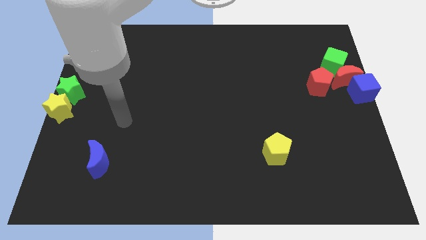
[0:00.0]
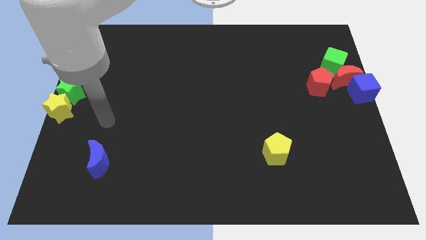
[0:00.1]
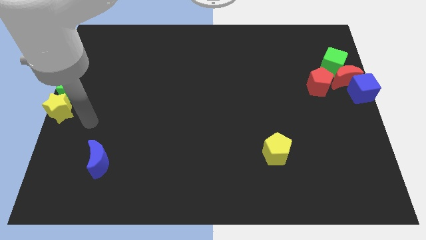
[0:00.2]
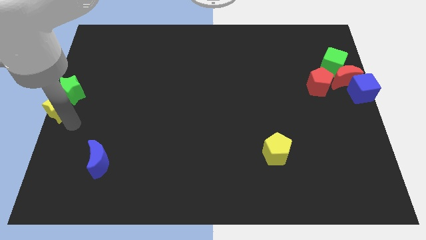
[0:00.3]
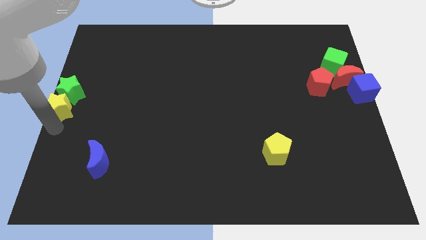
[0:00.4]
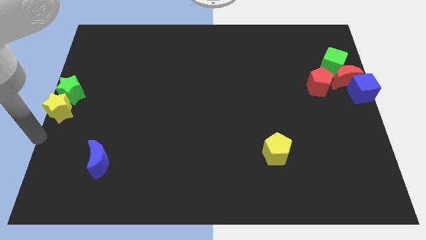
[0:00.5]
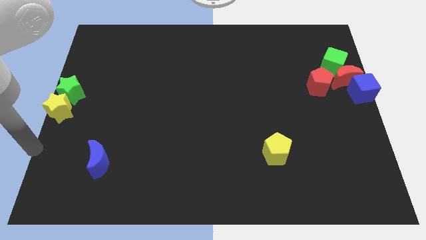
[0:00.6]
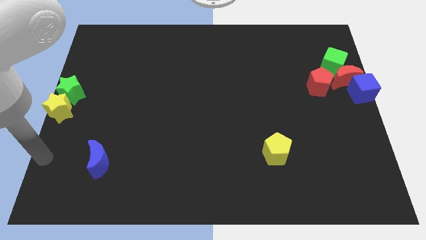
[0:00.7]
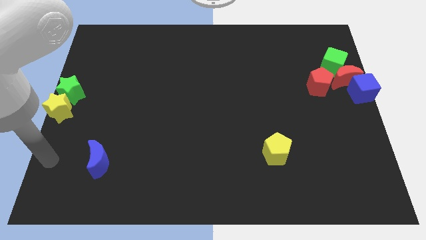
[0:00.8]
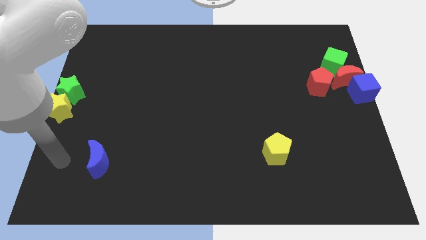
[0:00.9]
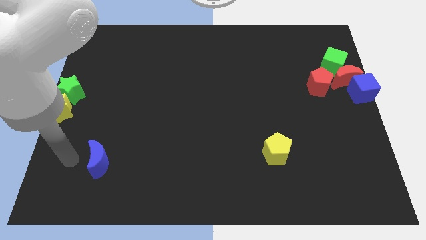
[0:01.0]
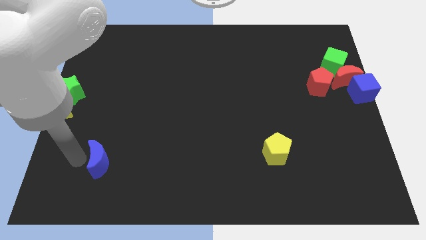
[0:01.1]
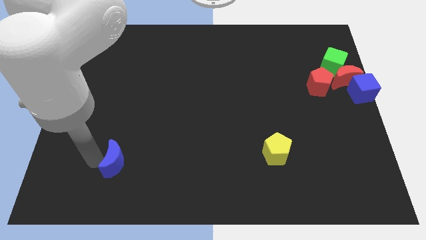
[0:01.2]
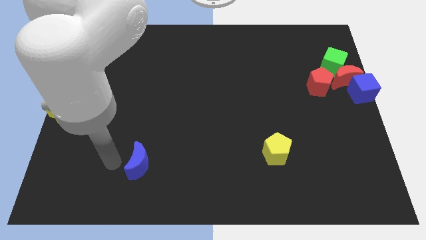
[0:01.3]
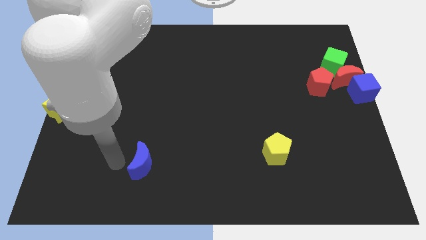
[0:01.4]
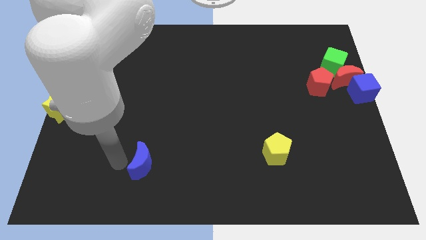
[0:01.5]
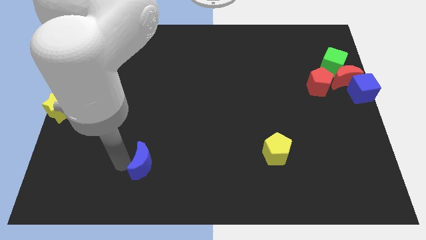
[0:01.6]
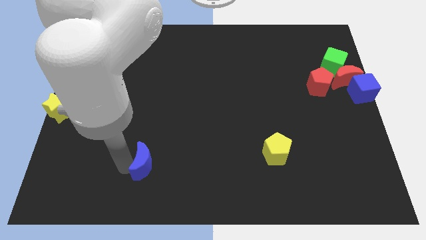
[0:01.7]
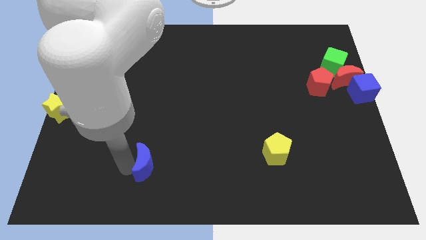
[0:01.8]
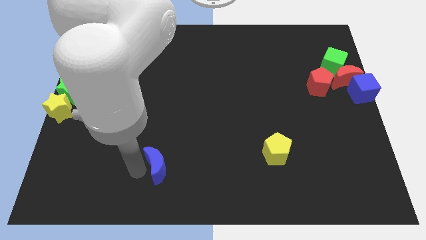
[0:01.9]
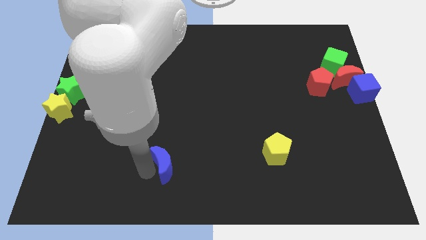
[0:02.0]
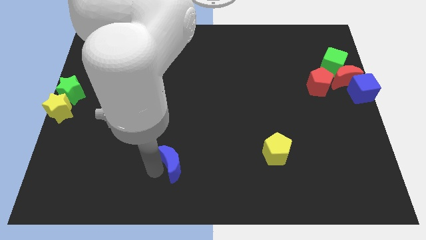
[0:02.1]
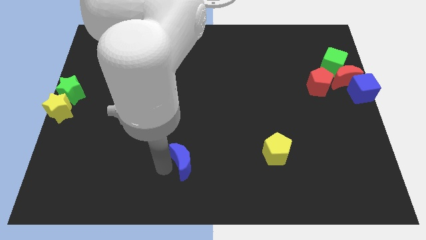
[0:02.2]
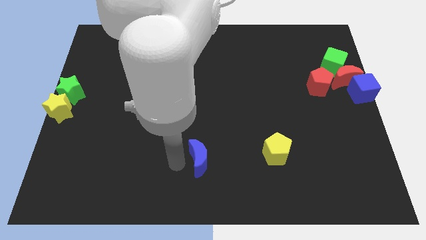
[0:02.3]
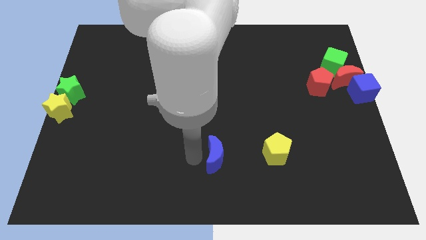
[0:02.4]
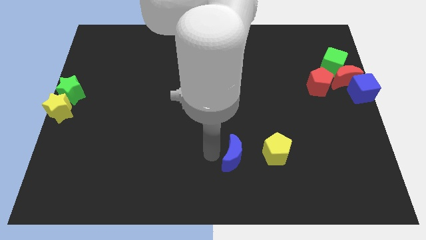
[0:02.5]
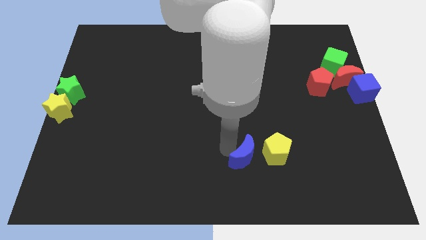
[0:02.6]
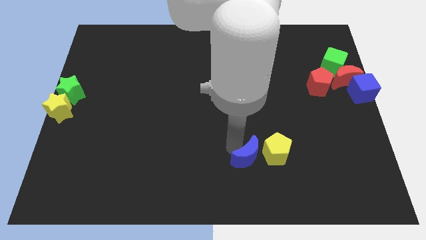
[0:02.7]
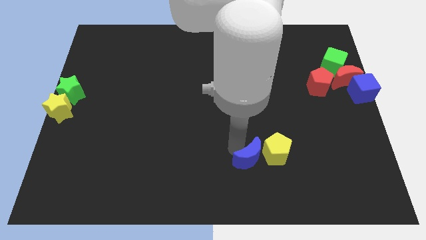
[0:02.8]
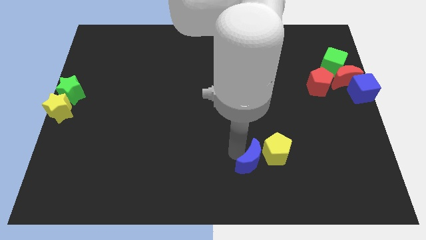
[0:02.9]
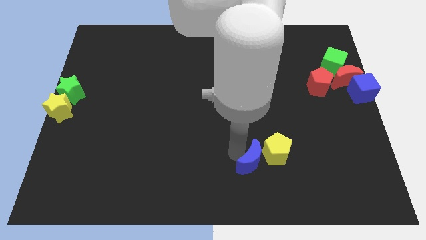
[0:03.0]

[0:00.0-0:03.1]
move blue moon left beside the yellow pentagon

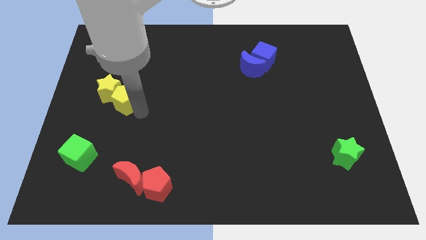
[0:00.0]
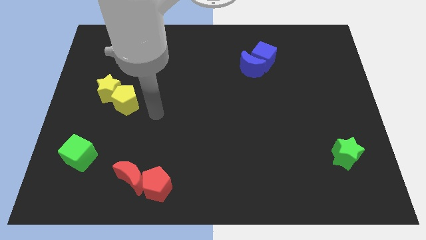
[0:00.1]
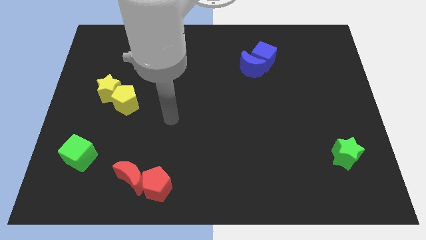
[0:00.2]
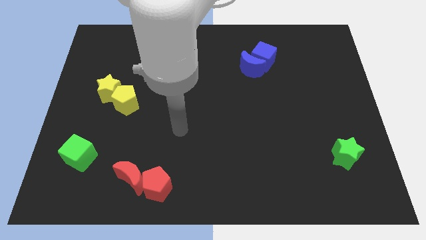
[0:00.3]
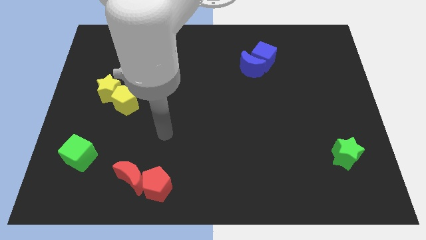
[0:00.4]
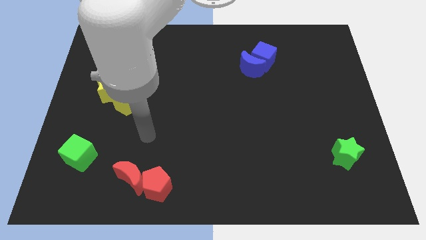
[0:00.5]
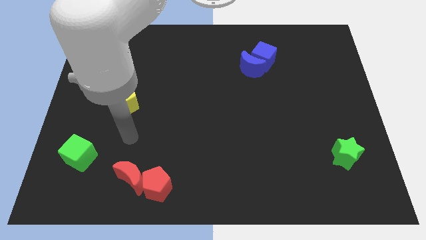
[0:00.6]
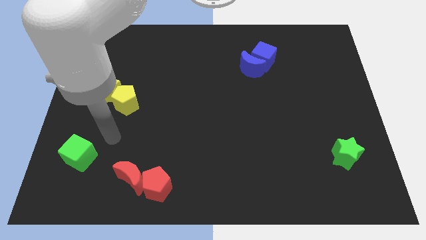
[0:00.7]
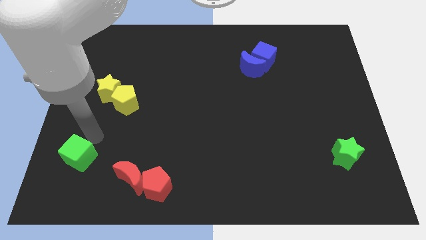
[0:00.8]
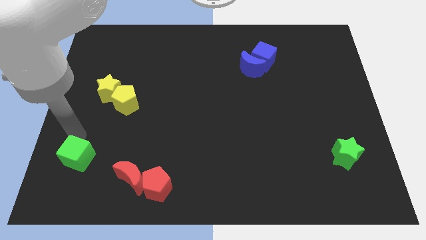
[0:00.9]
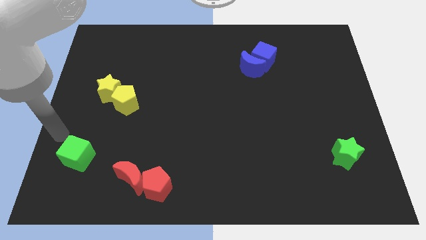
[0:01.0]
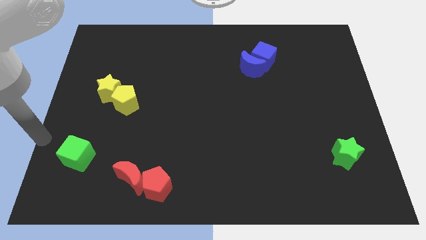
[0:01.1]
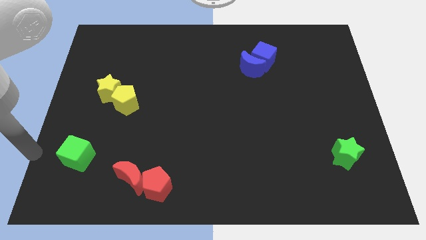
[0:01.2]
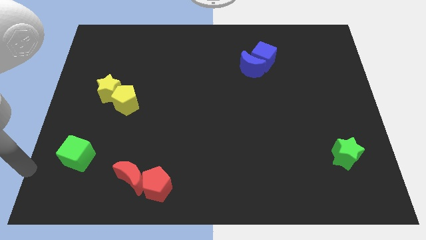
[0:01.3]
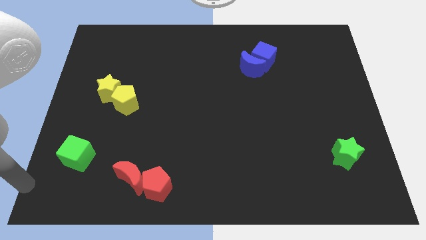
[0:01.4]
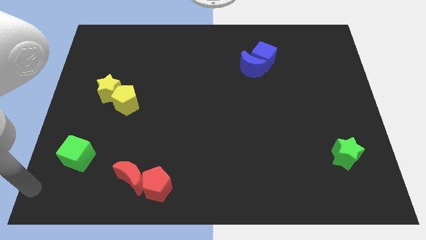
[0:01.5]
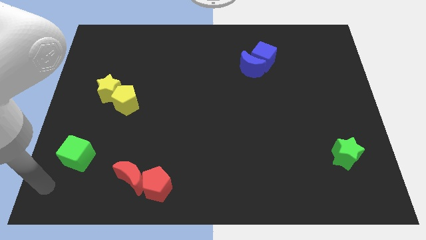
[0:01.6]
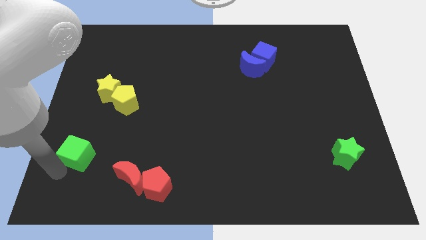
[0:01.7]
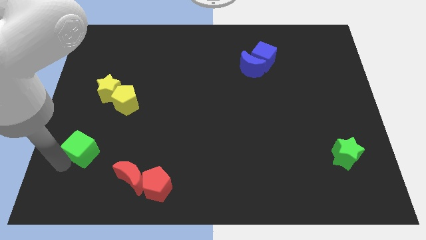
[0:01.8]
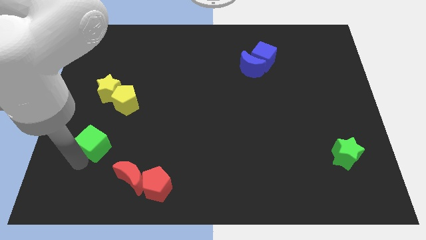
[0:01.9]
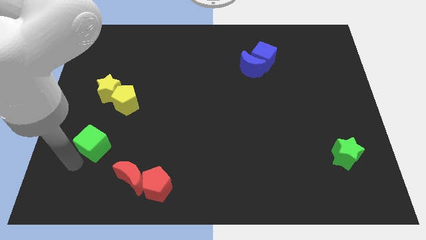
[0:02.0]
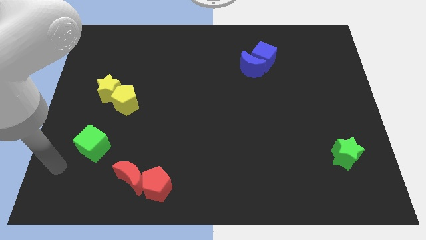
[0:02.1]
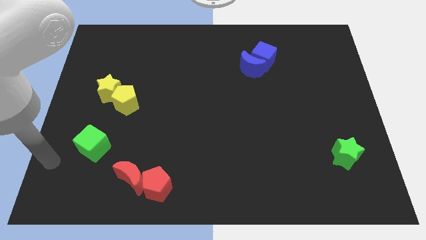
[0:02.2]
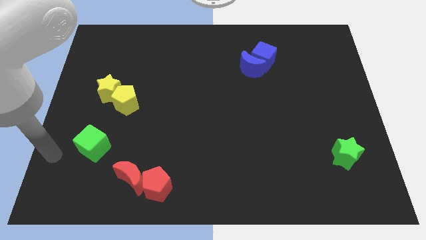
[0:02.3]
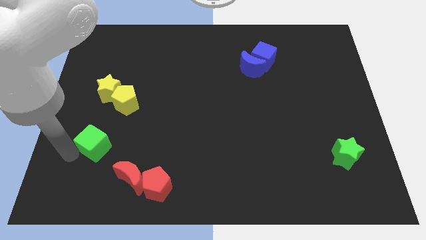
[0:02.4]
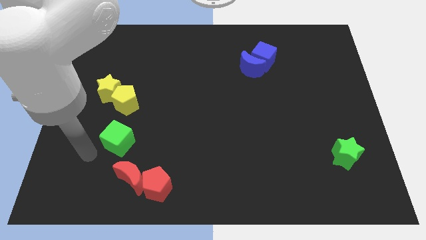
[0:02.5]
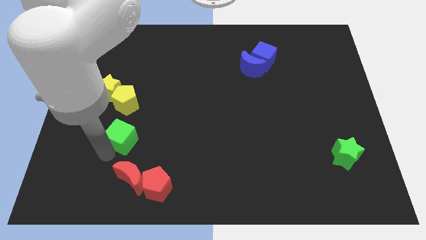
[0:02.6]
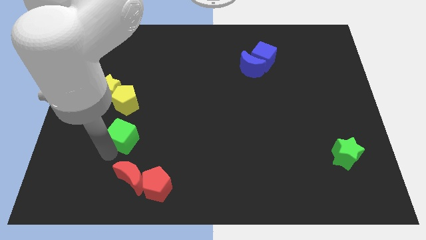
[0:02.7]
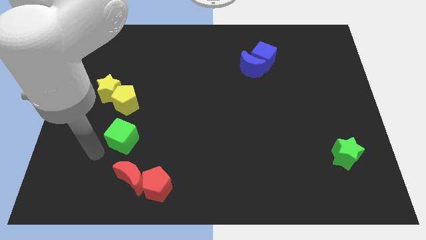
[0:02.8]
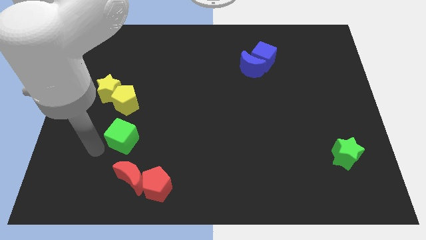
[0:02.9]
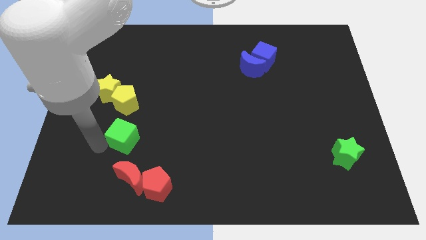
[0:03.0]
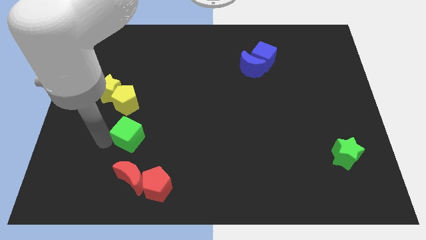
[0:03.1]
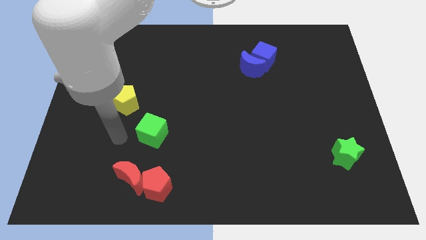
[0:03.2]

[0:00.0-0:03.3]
place the green cube at the bottom of the yellow pentagon

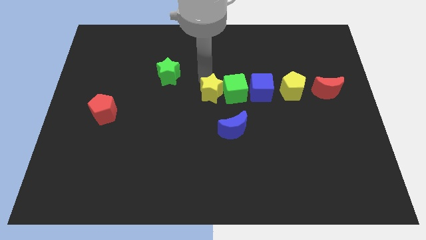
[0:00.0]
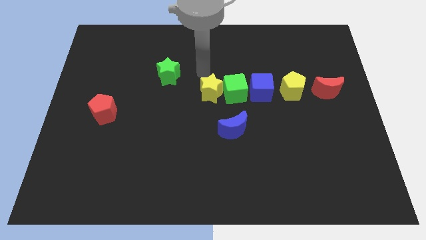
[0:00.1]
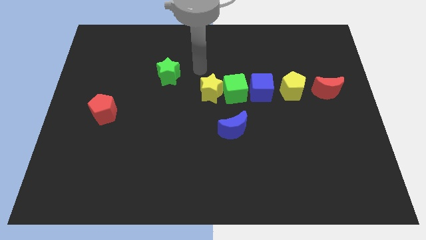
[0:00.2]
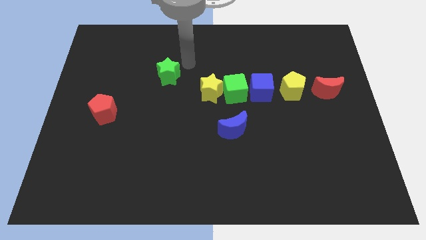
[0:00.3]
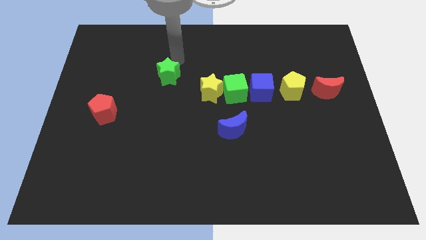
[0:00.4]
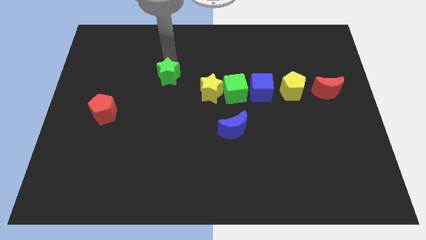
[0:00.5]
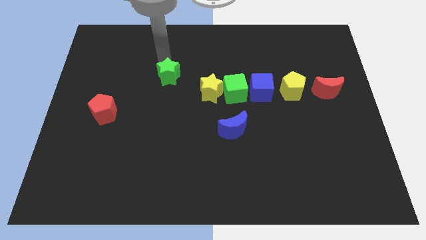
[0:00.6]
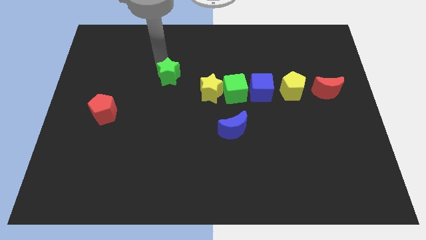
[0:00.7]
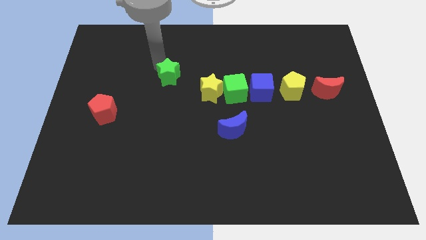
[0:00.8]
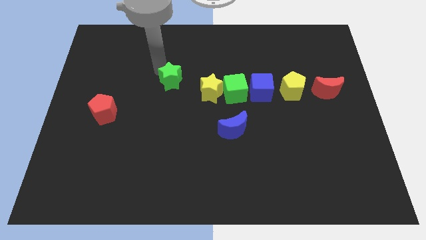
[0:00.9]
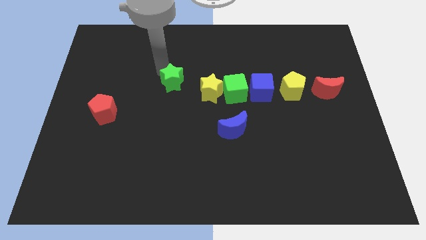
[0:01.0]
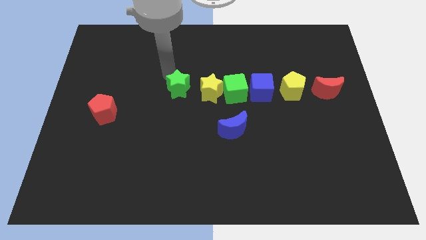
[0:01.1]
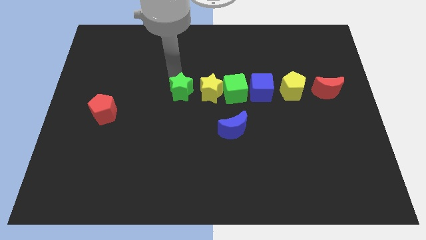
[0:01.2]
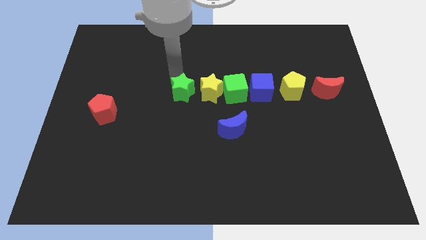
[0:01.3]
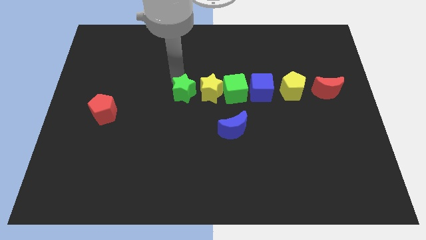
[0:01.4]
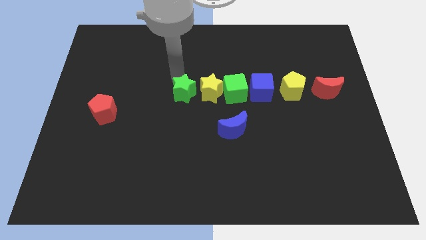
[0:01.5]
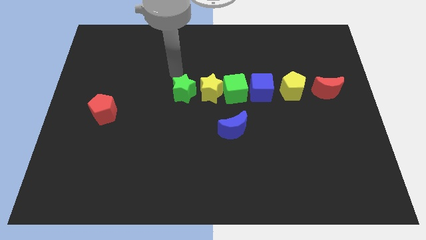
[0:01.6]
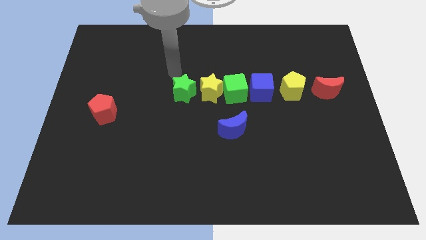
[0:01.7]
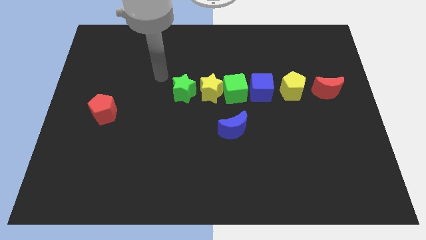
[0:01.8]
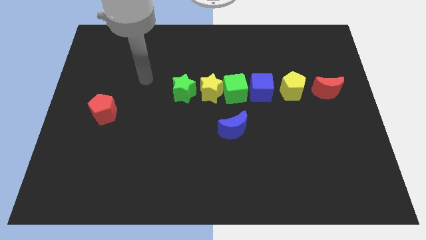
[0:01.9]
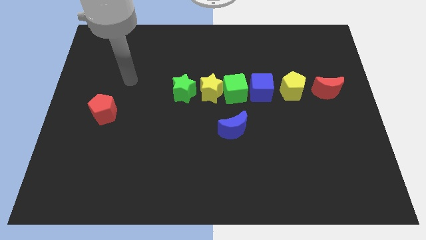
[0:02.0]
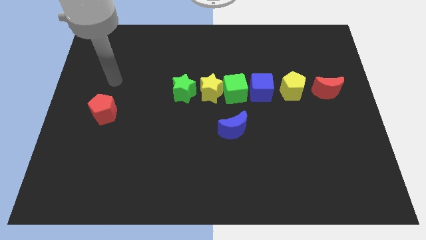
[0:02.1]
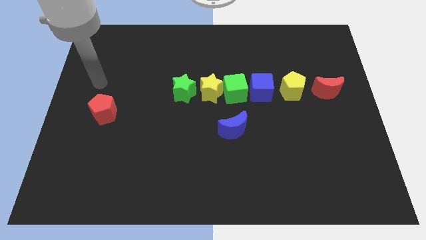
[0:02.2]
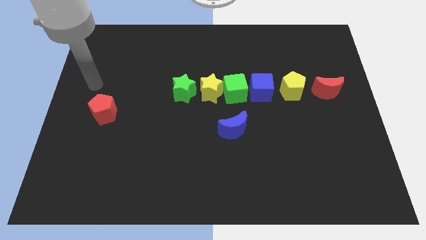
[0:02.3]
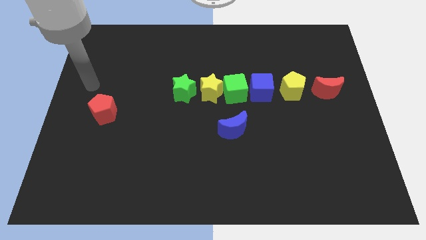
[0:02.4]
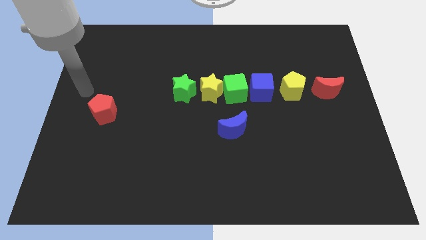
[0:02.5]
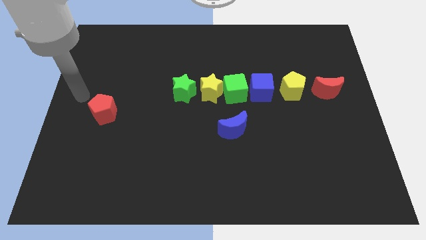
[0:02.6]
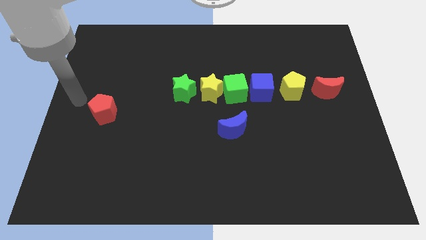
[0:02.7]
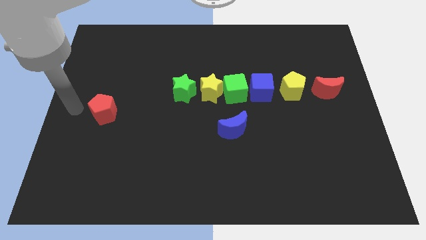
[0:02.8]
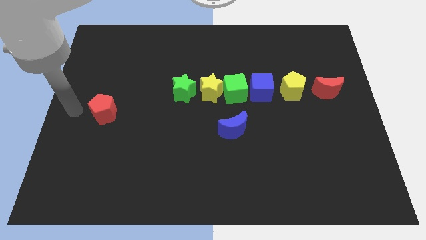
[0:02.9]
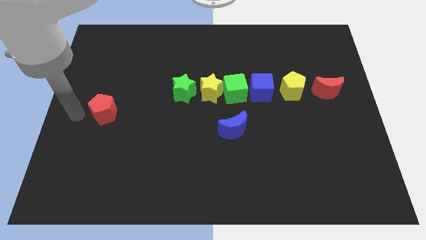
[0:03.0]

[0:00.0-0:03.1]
move the green star at the left of the yellow star
